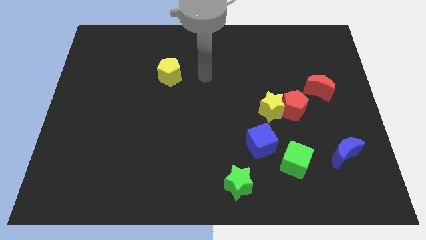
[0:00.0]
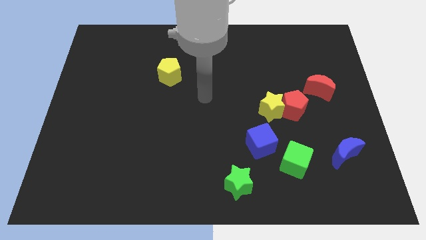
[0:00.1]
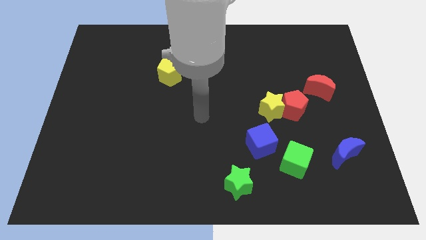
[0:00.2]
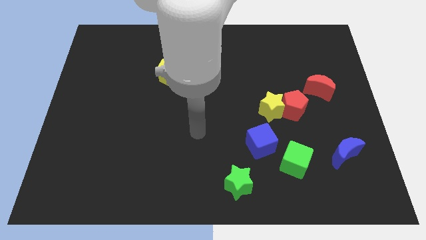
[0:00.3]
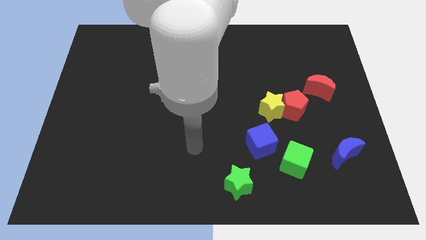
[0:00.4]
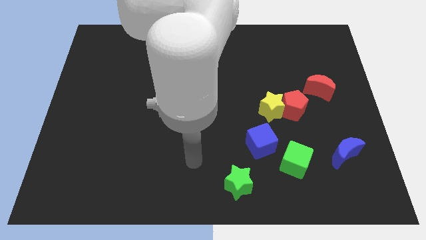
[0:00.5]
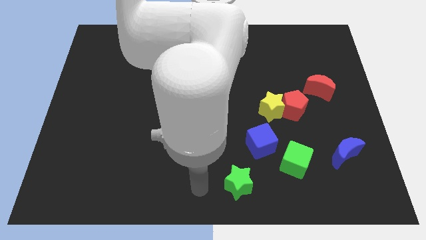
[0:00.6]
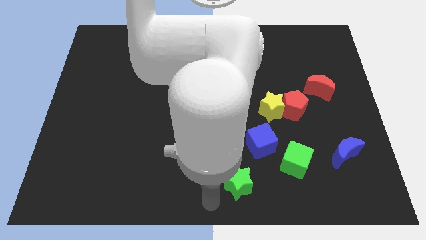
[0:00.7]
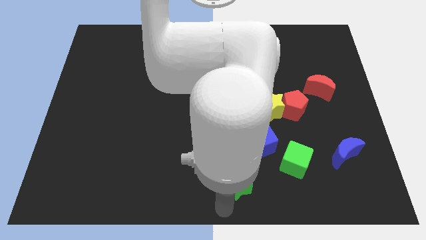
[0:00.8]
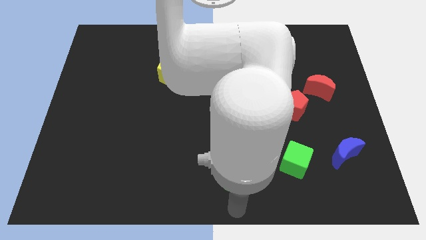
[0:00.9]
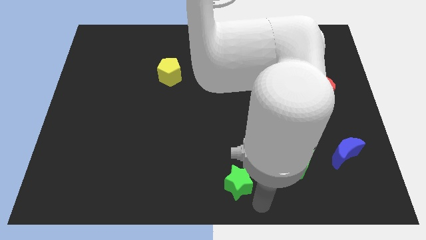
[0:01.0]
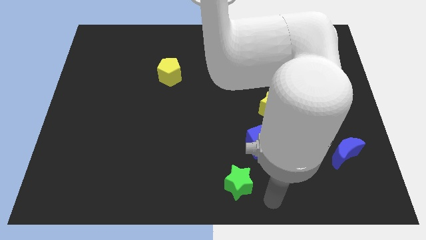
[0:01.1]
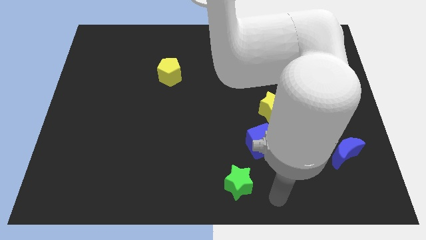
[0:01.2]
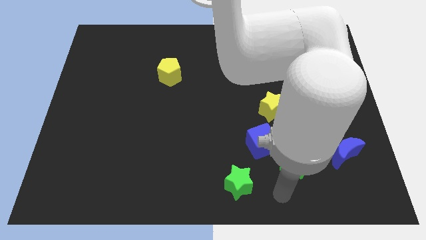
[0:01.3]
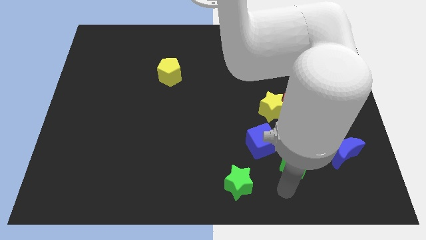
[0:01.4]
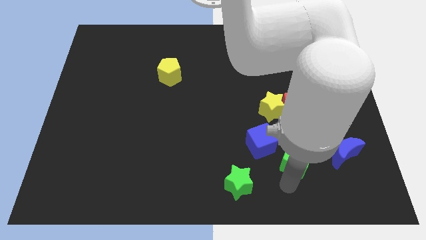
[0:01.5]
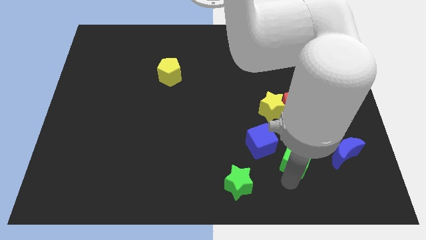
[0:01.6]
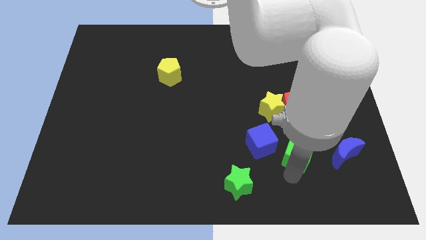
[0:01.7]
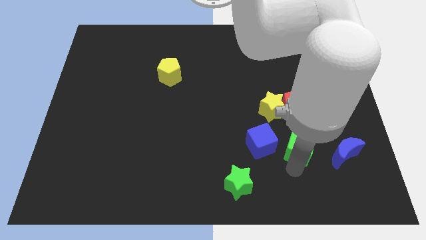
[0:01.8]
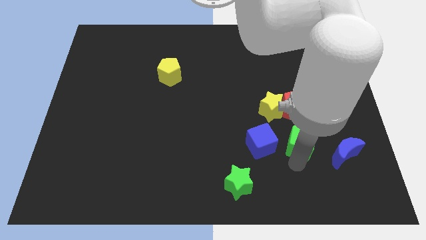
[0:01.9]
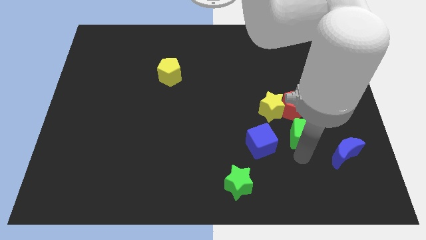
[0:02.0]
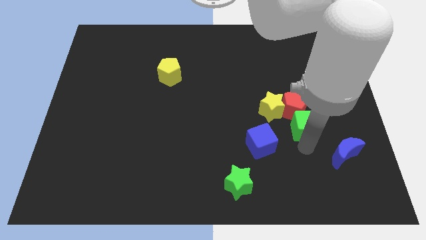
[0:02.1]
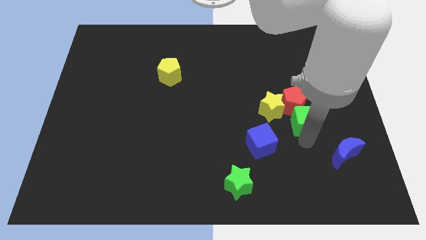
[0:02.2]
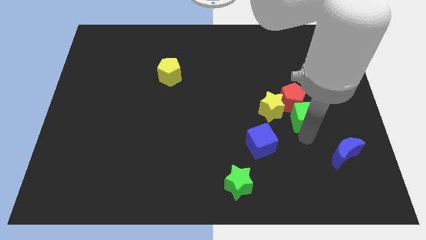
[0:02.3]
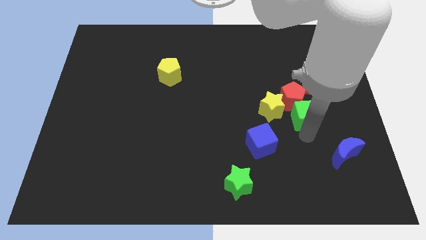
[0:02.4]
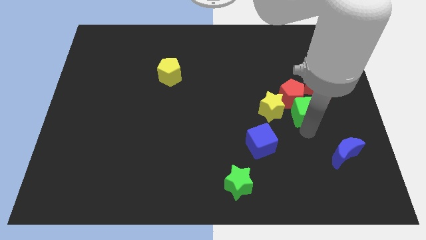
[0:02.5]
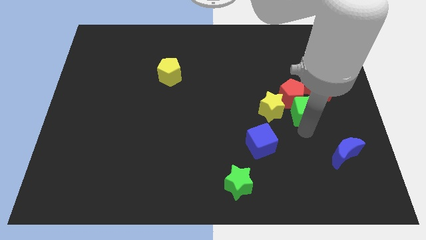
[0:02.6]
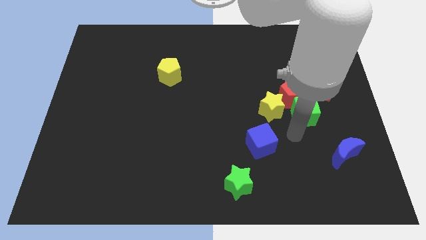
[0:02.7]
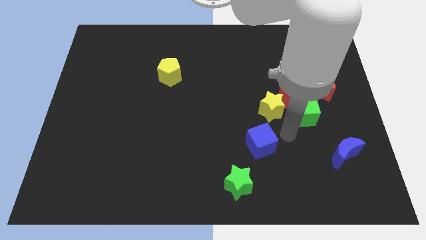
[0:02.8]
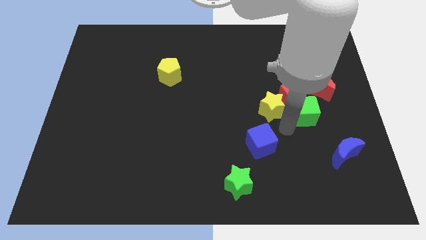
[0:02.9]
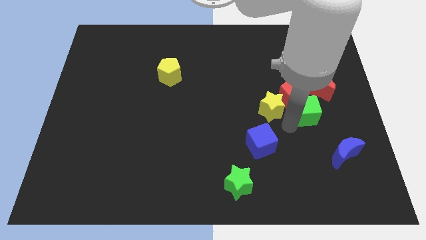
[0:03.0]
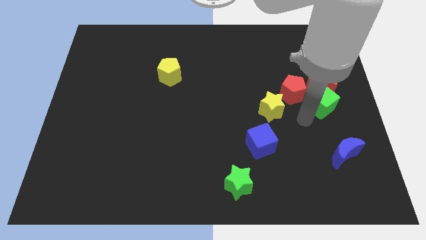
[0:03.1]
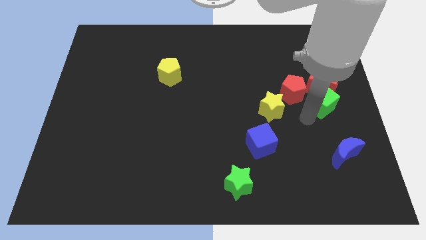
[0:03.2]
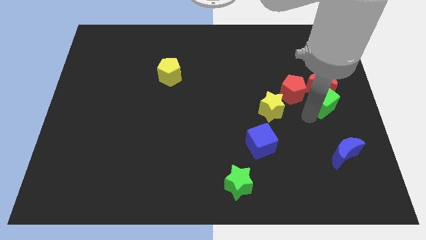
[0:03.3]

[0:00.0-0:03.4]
push the green cube to the red moon

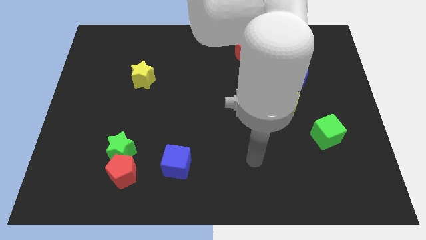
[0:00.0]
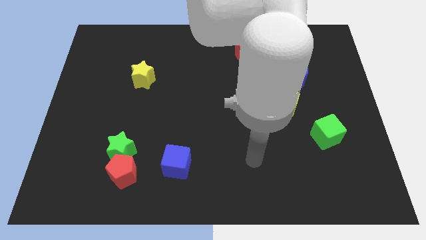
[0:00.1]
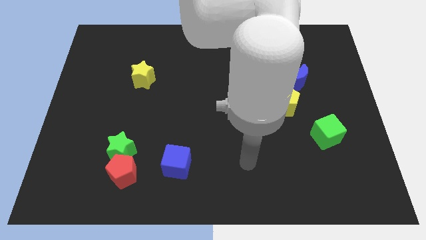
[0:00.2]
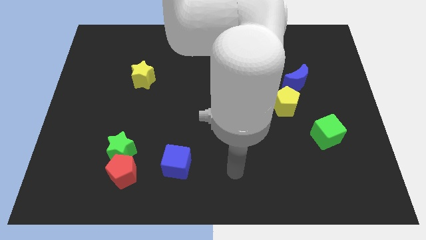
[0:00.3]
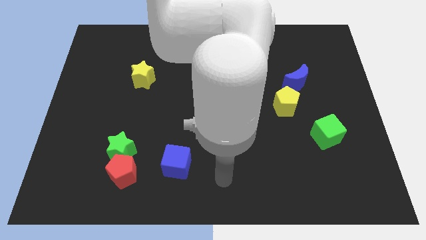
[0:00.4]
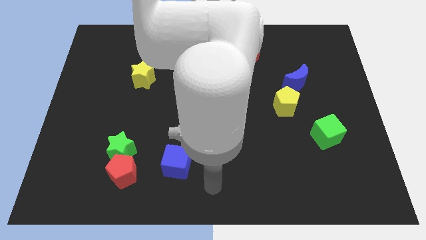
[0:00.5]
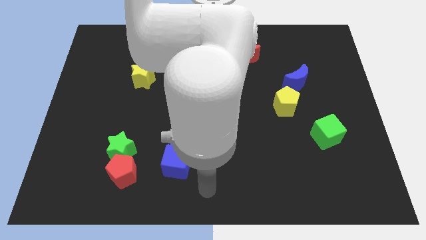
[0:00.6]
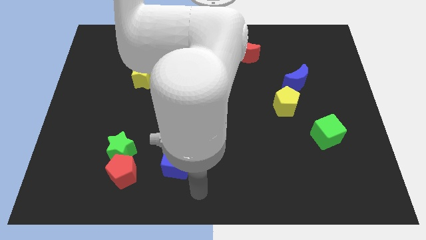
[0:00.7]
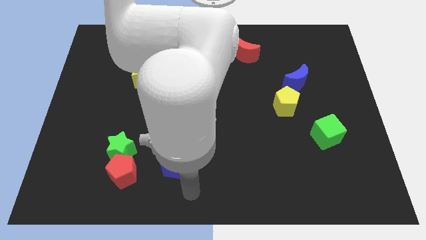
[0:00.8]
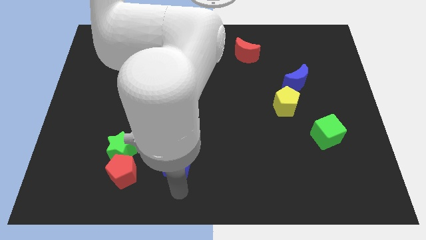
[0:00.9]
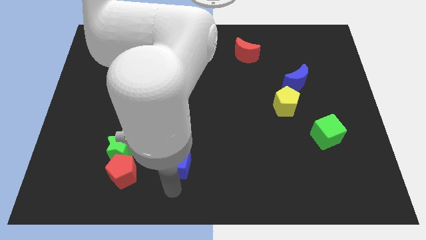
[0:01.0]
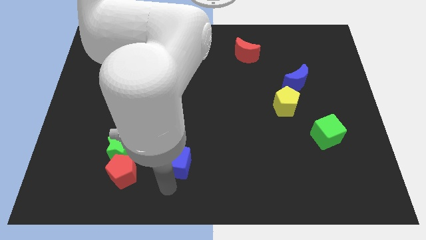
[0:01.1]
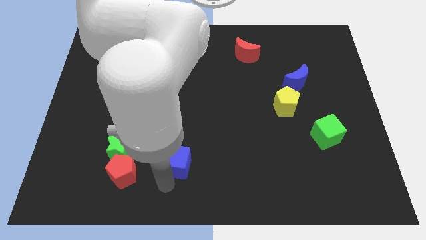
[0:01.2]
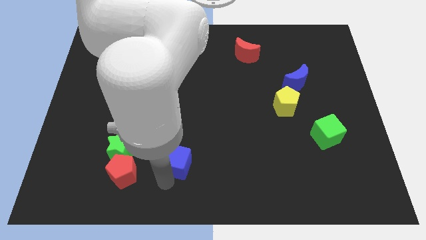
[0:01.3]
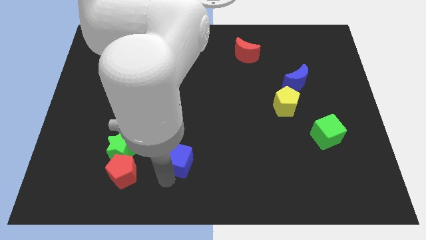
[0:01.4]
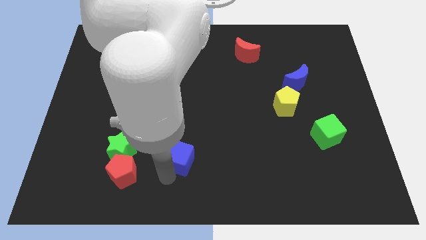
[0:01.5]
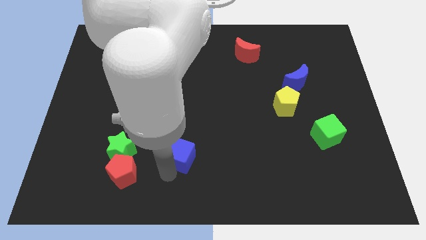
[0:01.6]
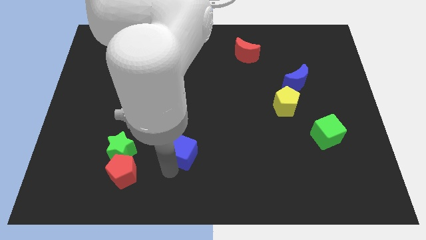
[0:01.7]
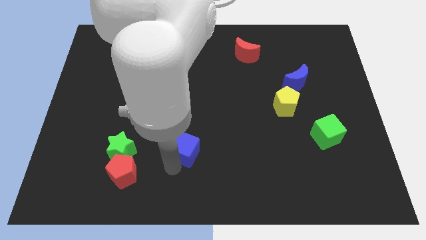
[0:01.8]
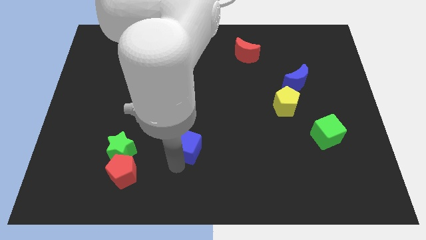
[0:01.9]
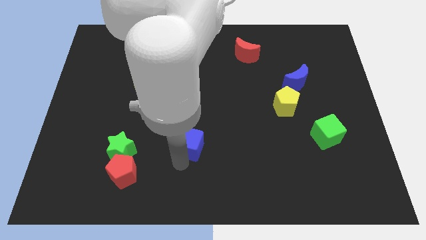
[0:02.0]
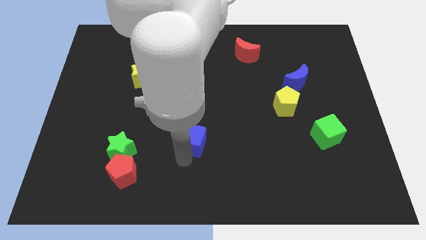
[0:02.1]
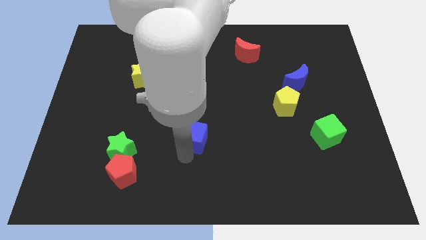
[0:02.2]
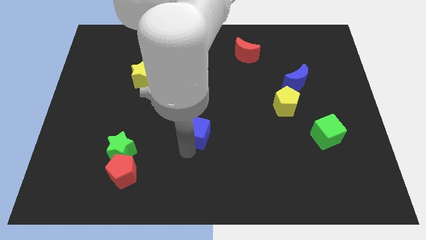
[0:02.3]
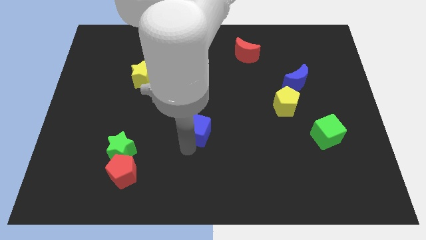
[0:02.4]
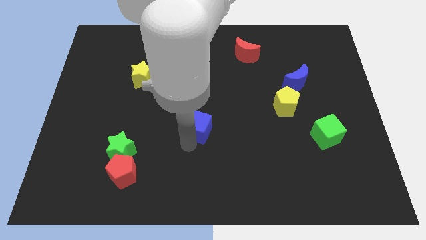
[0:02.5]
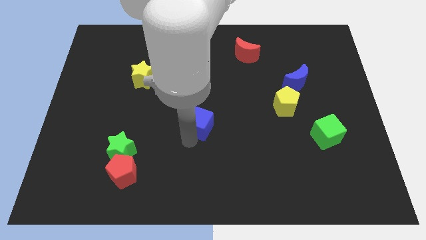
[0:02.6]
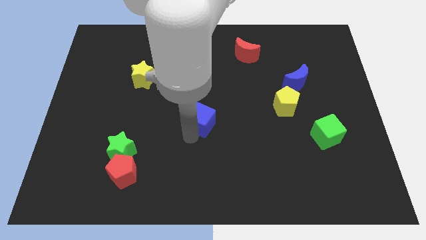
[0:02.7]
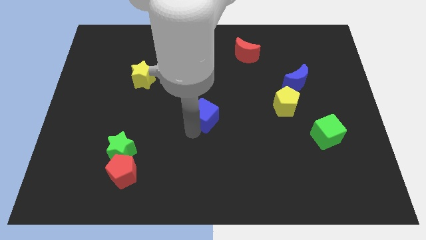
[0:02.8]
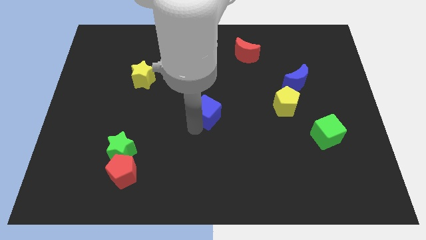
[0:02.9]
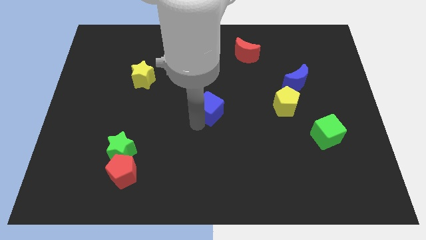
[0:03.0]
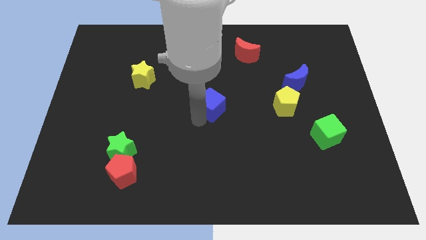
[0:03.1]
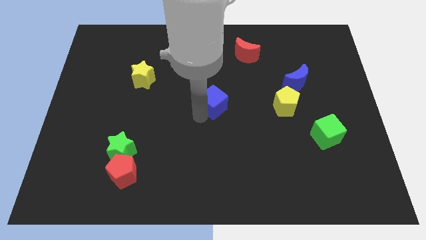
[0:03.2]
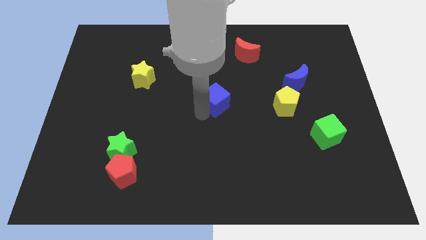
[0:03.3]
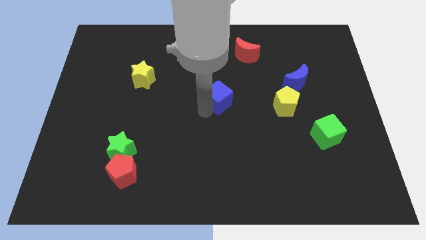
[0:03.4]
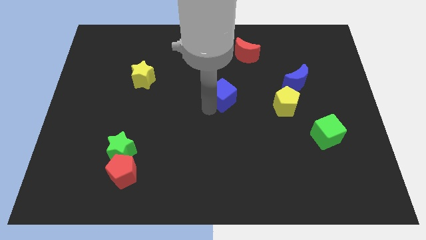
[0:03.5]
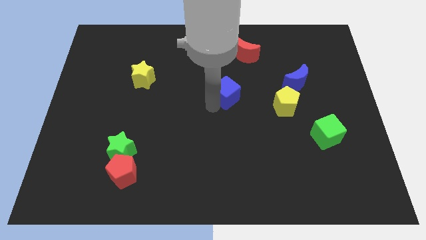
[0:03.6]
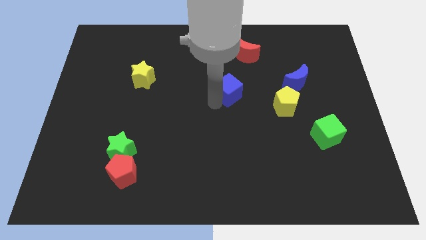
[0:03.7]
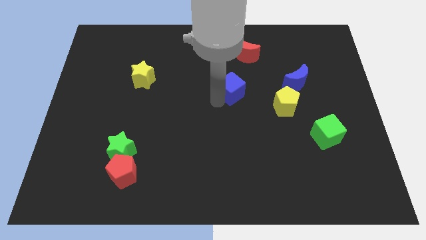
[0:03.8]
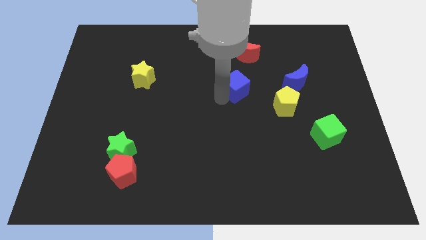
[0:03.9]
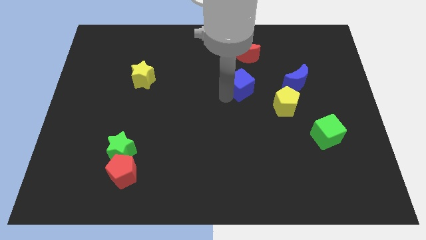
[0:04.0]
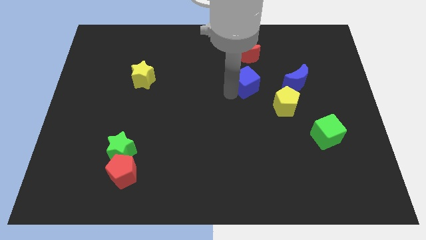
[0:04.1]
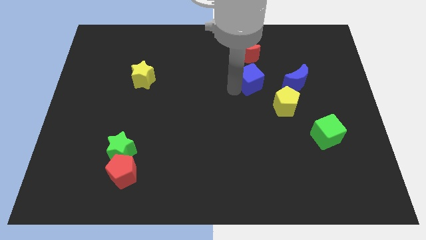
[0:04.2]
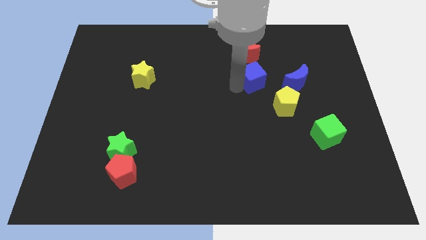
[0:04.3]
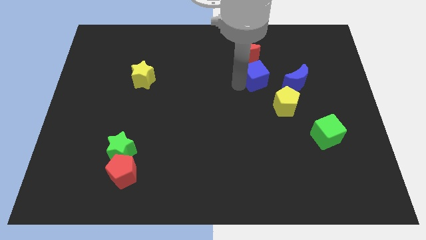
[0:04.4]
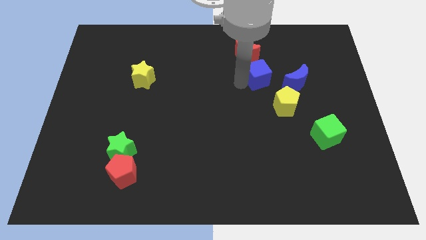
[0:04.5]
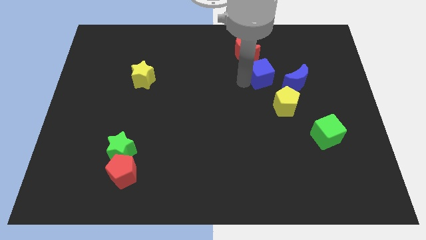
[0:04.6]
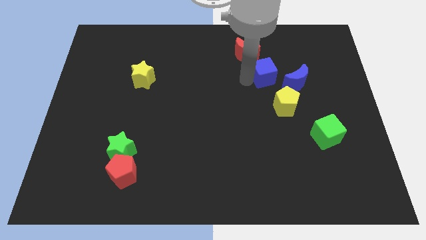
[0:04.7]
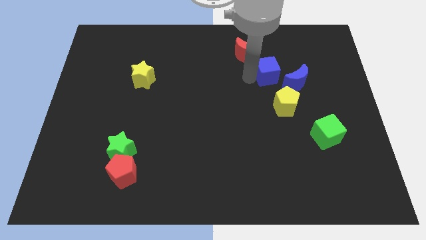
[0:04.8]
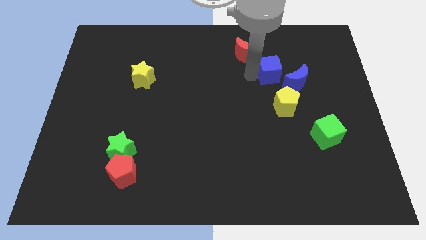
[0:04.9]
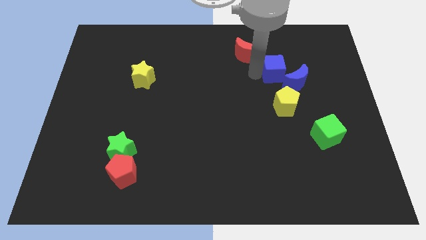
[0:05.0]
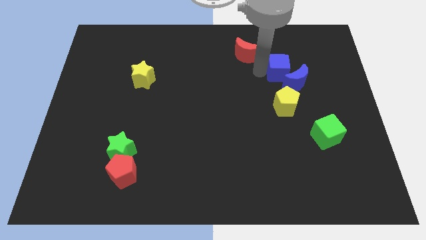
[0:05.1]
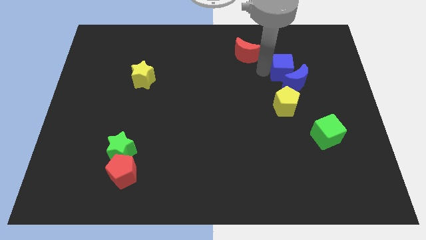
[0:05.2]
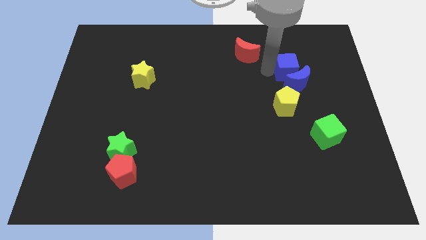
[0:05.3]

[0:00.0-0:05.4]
push the blue cube close to the blue moon
